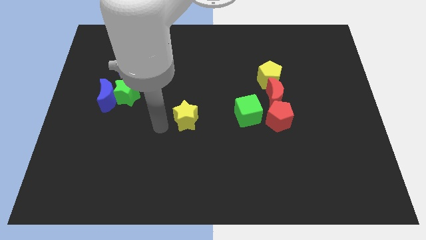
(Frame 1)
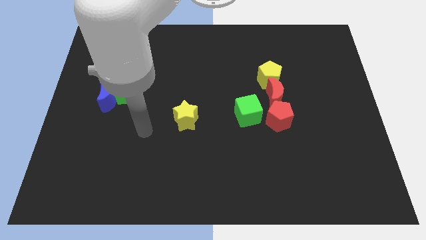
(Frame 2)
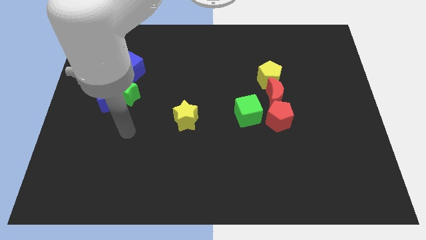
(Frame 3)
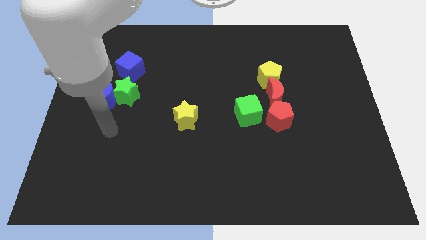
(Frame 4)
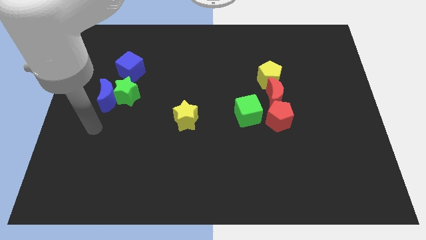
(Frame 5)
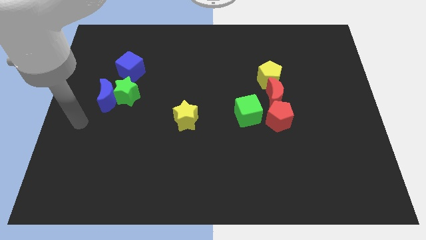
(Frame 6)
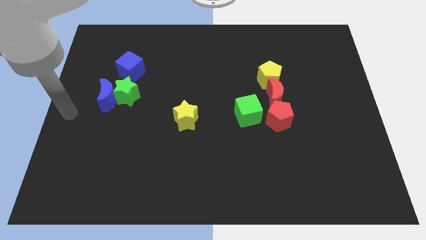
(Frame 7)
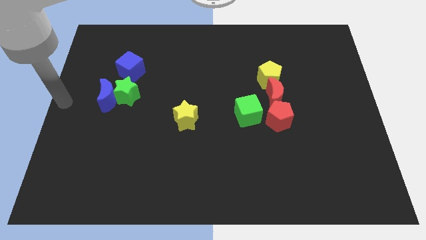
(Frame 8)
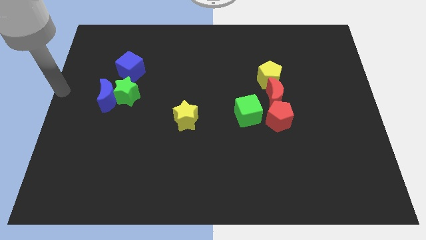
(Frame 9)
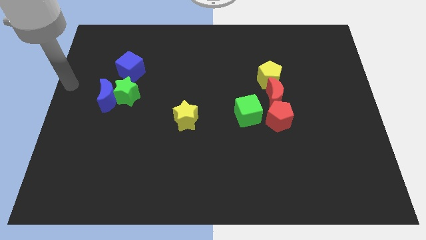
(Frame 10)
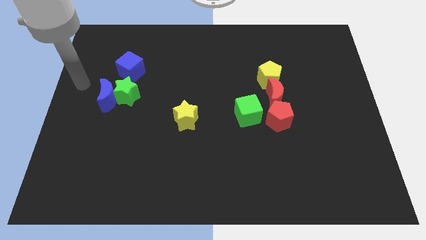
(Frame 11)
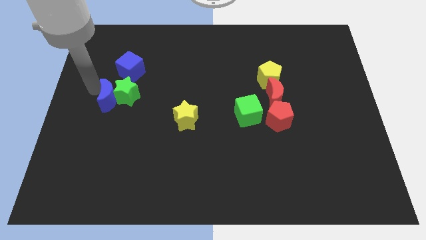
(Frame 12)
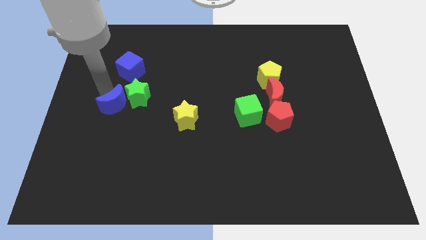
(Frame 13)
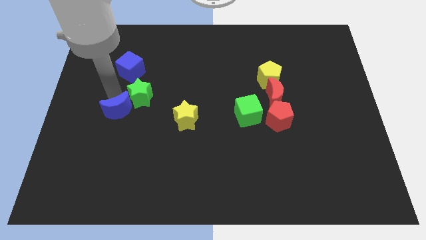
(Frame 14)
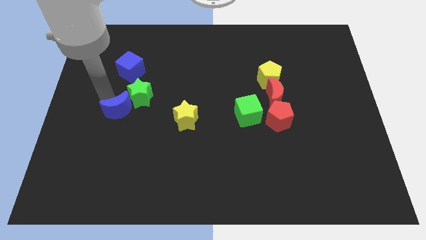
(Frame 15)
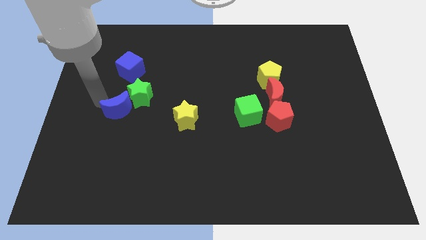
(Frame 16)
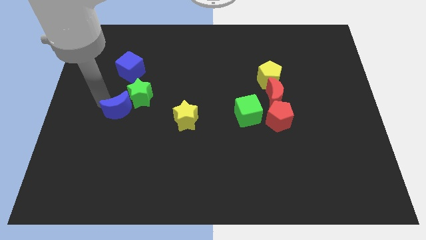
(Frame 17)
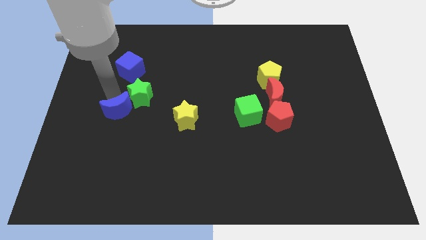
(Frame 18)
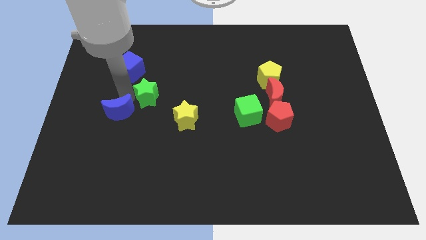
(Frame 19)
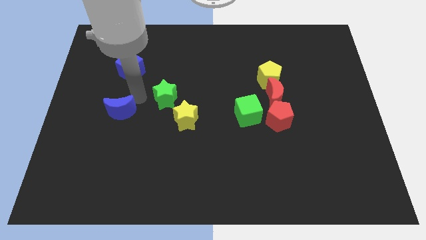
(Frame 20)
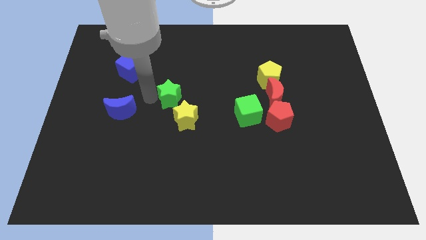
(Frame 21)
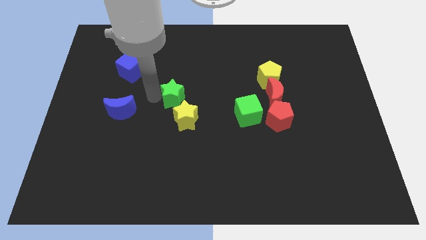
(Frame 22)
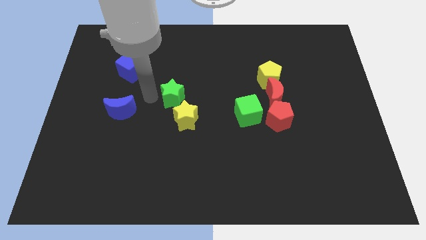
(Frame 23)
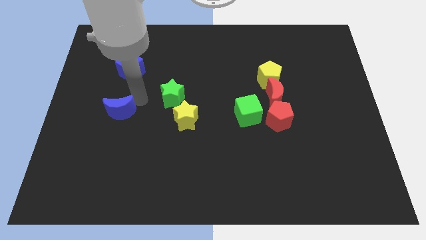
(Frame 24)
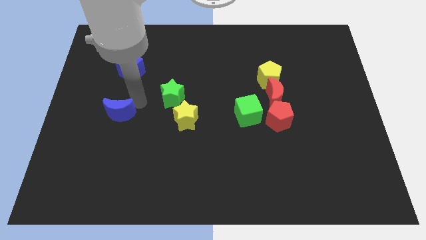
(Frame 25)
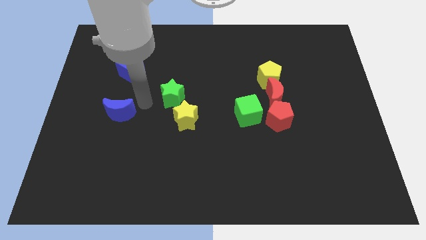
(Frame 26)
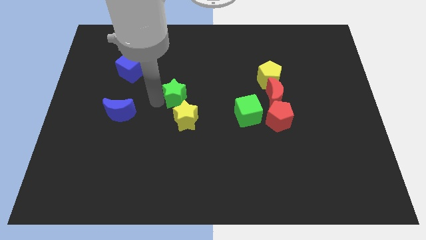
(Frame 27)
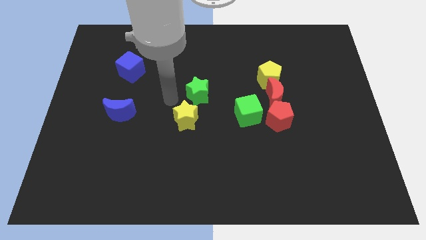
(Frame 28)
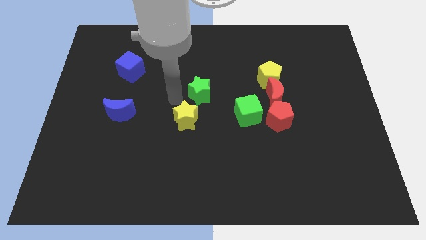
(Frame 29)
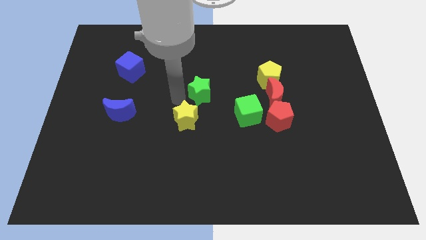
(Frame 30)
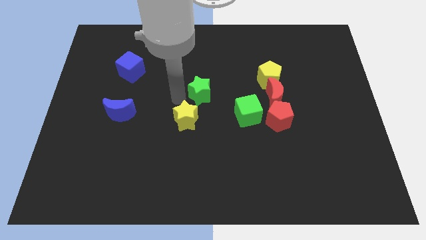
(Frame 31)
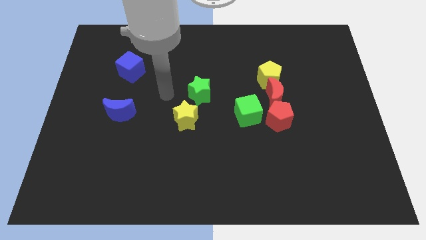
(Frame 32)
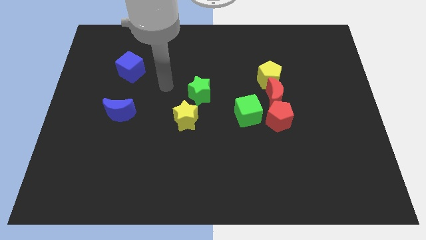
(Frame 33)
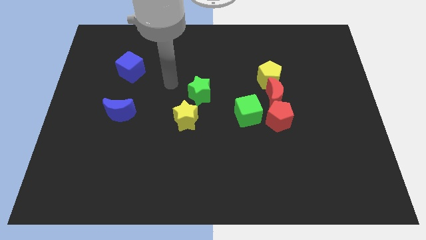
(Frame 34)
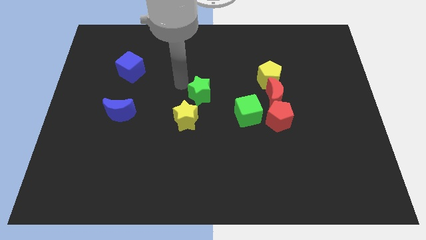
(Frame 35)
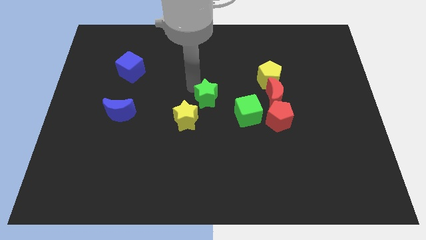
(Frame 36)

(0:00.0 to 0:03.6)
move the green star to the top right of the yellow star

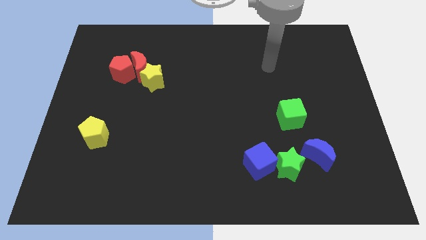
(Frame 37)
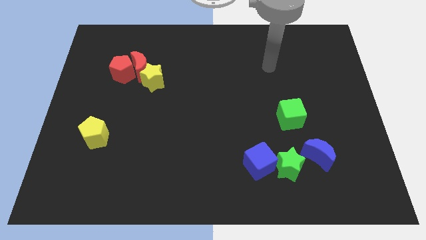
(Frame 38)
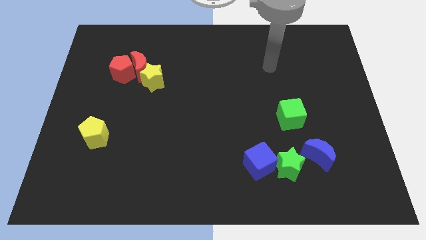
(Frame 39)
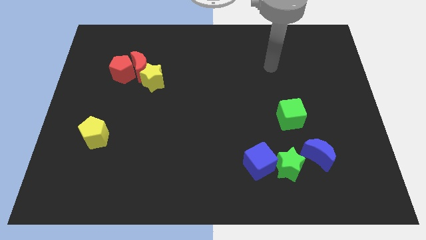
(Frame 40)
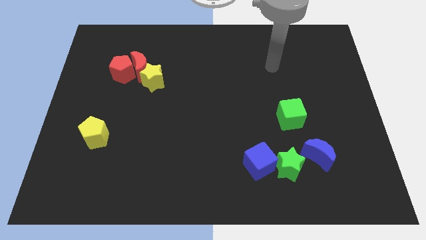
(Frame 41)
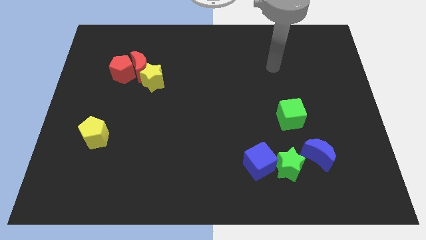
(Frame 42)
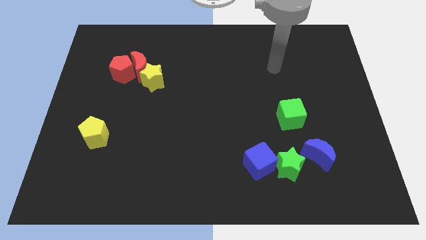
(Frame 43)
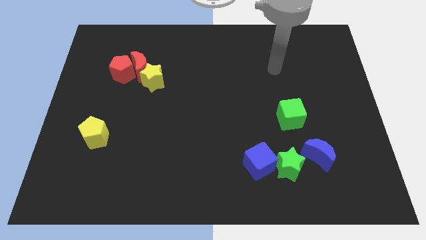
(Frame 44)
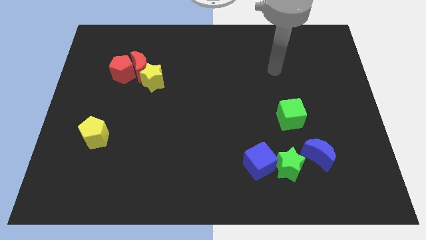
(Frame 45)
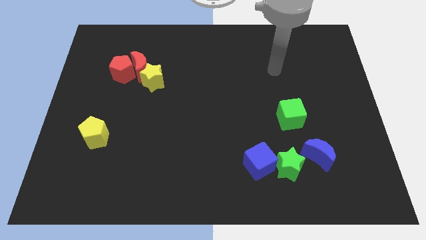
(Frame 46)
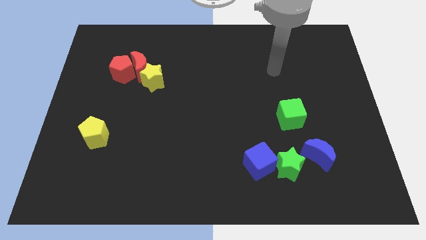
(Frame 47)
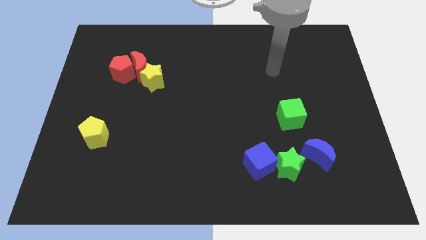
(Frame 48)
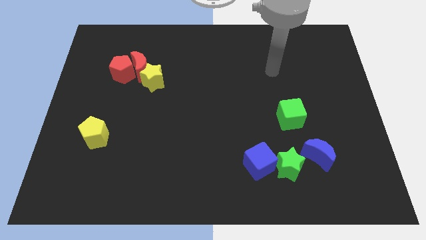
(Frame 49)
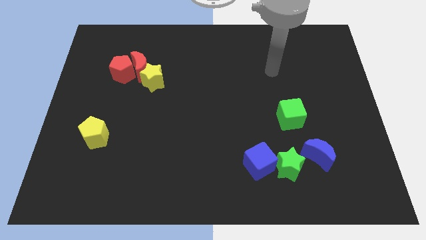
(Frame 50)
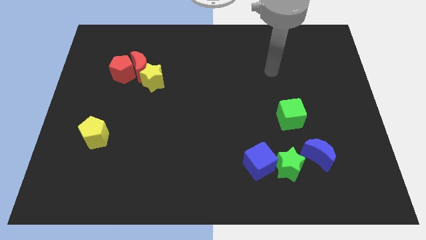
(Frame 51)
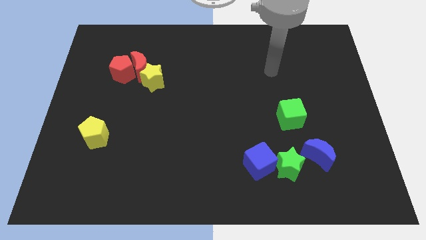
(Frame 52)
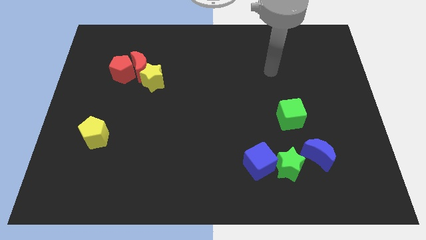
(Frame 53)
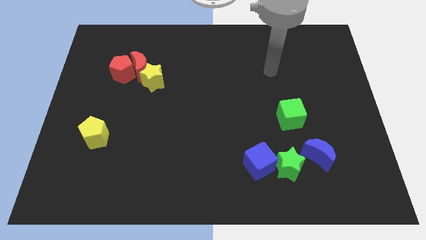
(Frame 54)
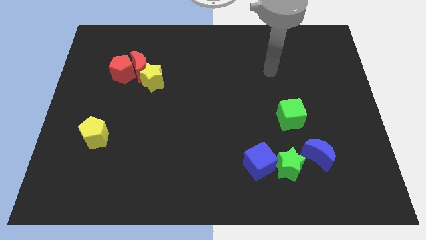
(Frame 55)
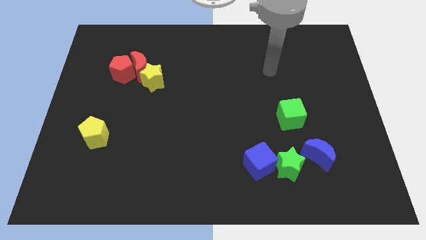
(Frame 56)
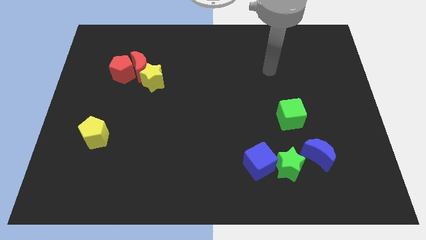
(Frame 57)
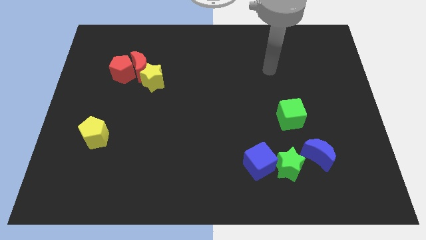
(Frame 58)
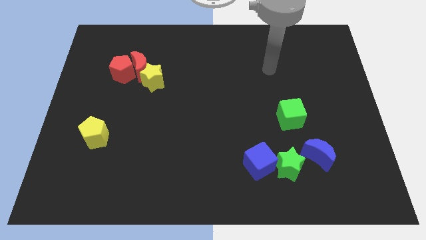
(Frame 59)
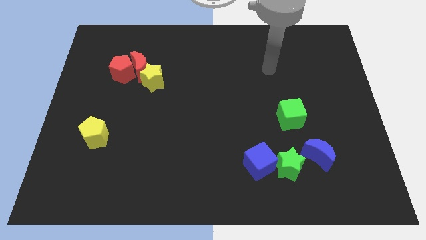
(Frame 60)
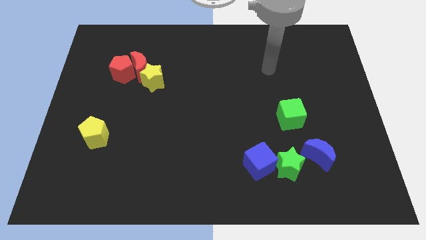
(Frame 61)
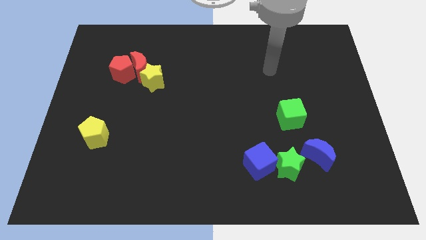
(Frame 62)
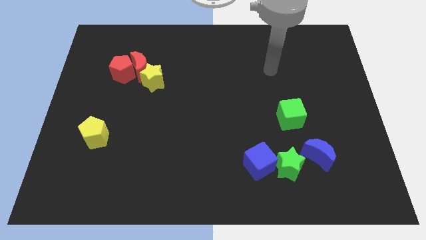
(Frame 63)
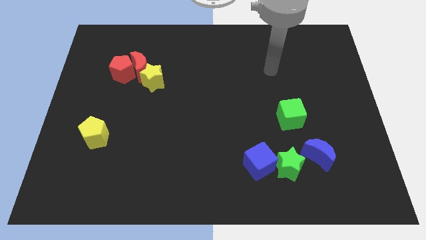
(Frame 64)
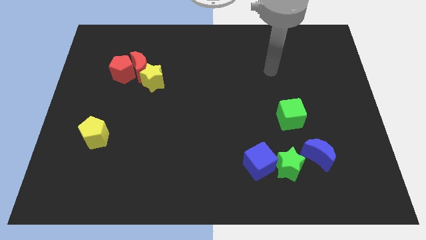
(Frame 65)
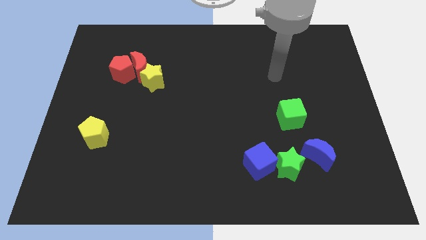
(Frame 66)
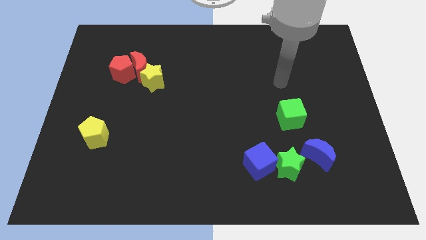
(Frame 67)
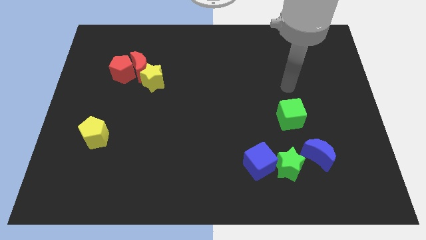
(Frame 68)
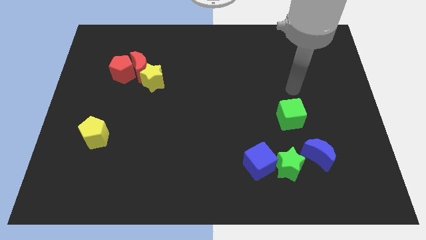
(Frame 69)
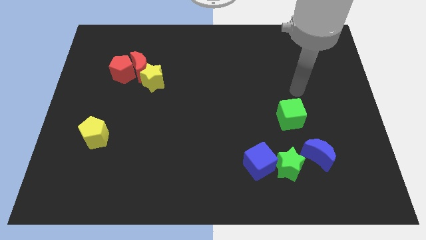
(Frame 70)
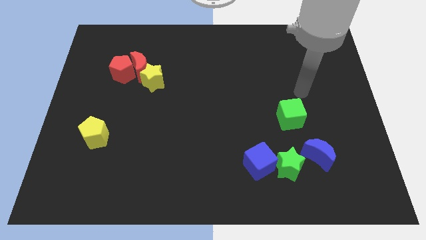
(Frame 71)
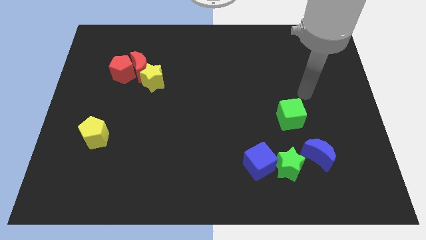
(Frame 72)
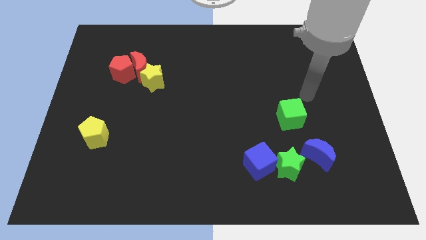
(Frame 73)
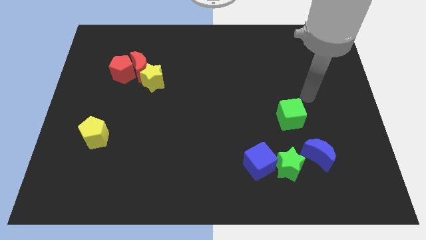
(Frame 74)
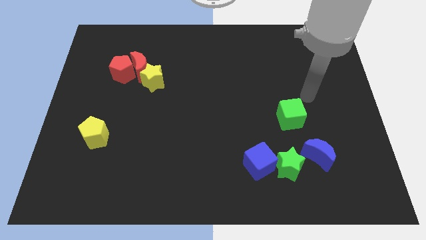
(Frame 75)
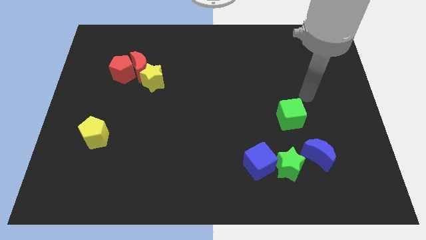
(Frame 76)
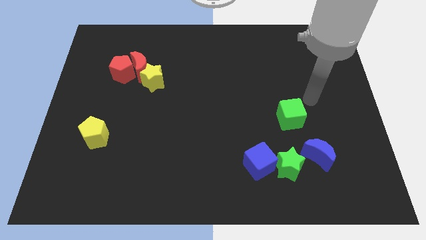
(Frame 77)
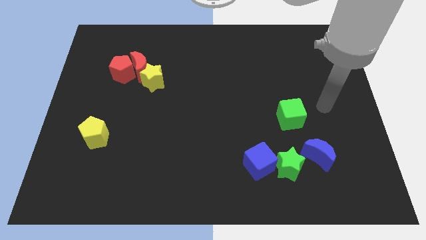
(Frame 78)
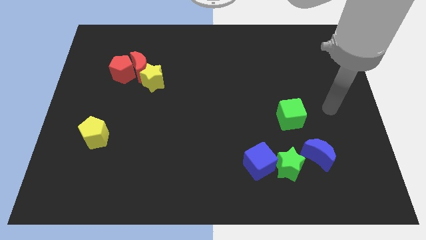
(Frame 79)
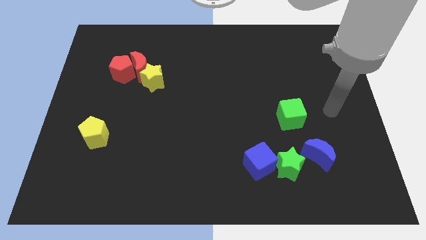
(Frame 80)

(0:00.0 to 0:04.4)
point your hand at the right side of the green cube

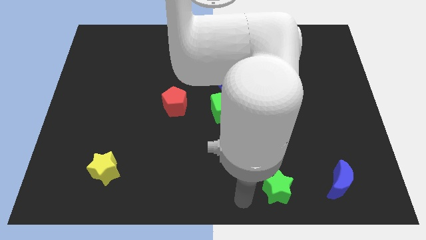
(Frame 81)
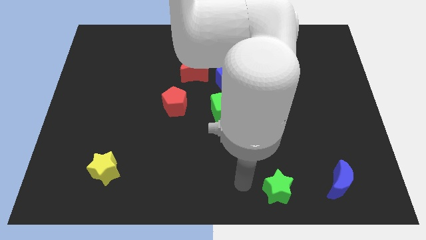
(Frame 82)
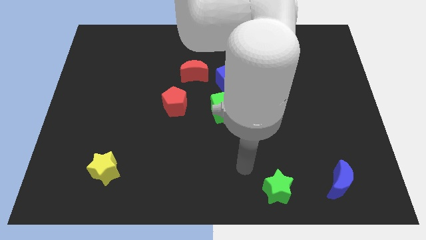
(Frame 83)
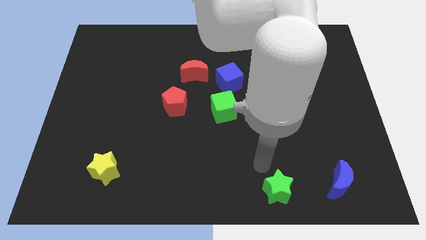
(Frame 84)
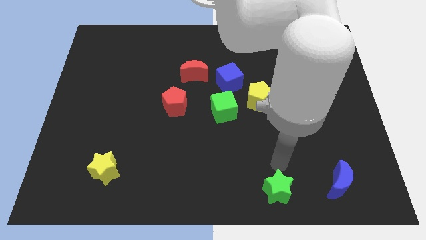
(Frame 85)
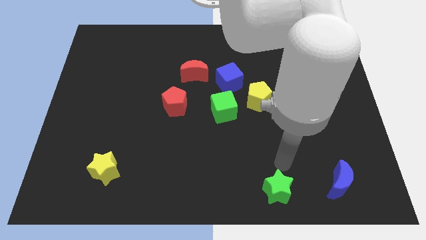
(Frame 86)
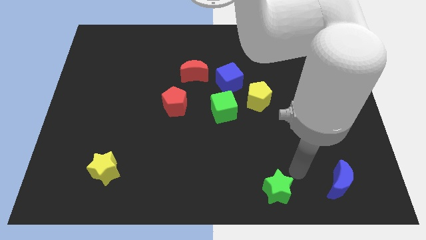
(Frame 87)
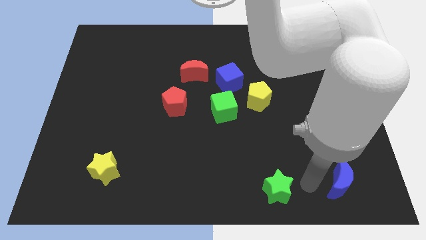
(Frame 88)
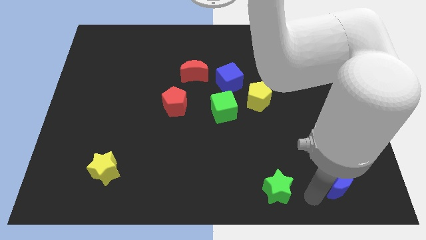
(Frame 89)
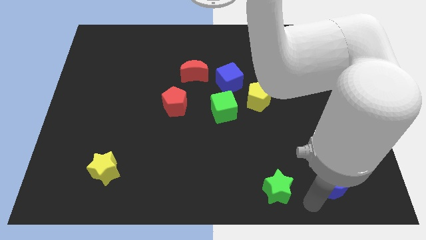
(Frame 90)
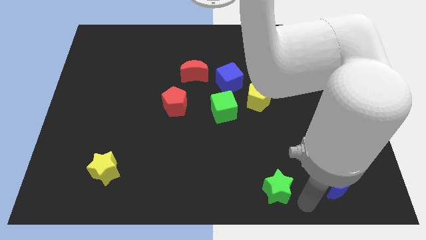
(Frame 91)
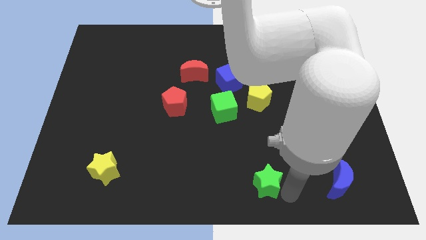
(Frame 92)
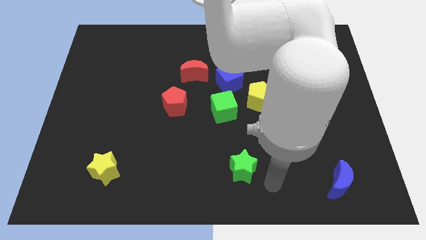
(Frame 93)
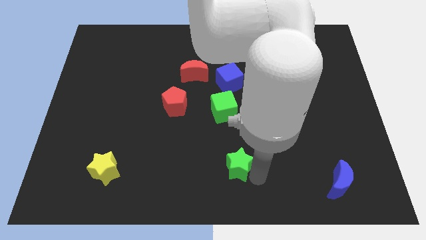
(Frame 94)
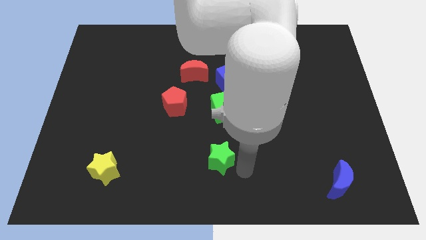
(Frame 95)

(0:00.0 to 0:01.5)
move the green star to the bottom of the green cube
